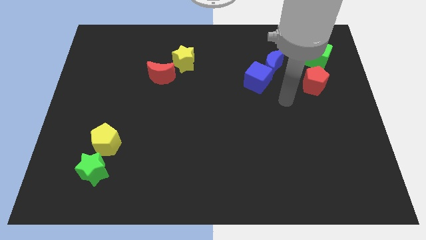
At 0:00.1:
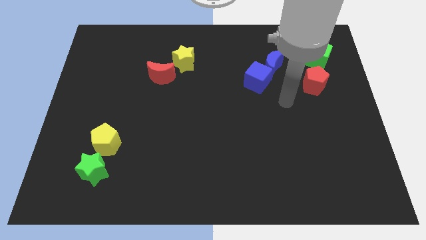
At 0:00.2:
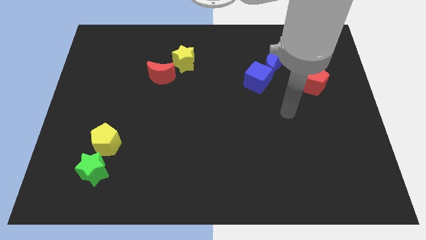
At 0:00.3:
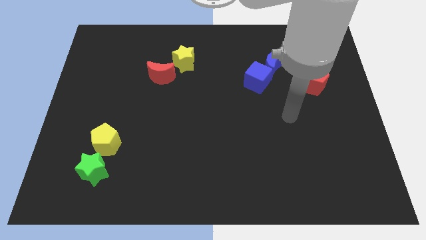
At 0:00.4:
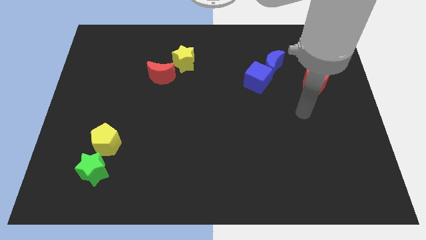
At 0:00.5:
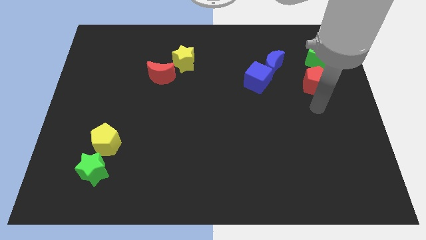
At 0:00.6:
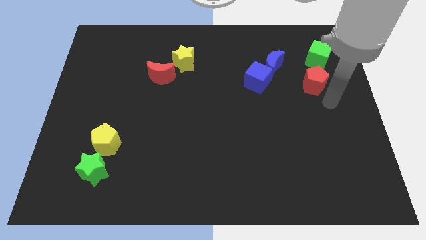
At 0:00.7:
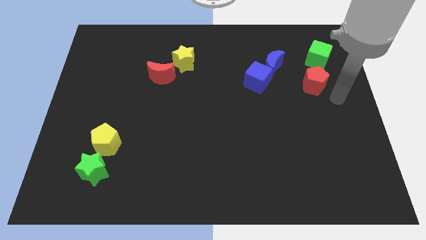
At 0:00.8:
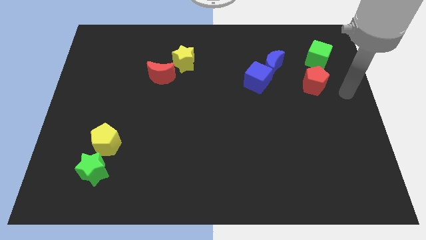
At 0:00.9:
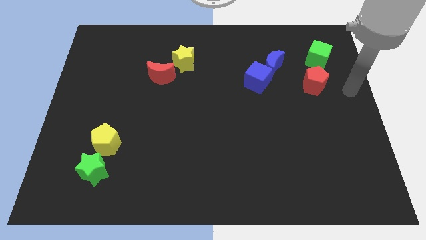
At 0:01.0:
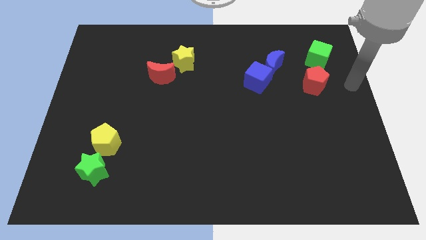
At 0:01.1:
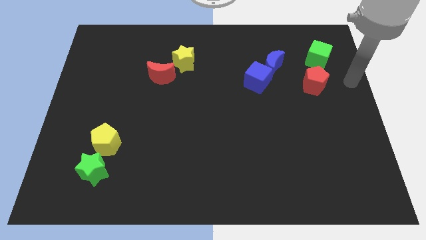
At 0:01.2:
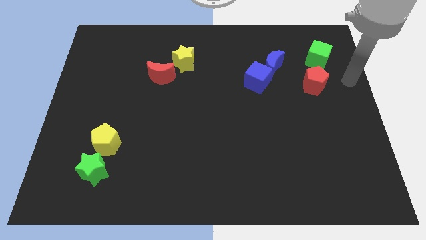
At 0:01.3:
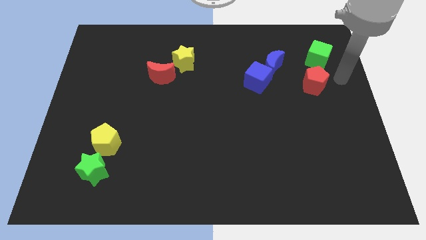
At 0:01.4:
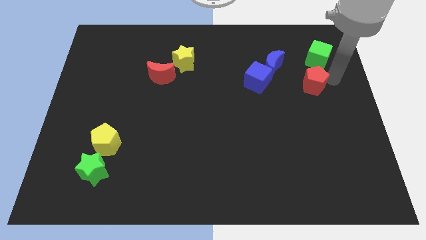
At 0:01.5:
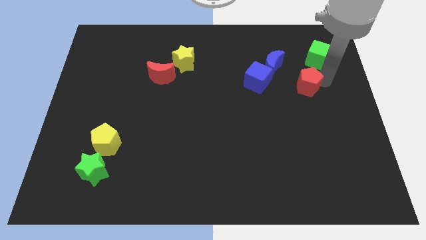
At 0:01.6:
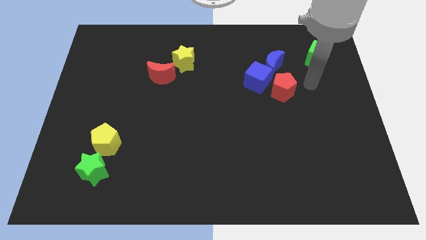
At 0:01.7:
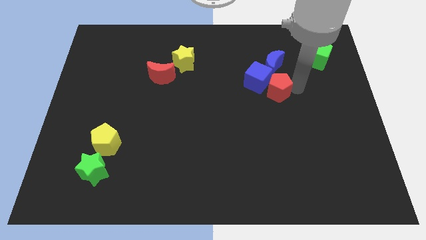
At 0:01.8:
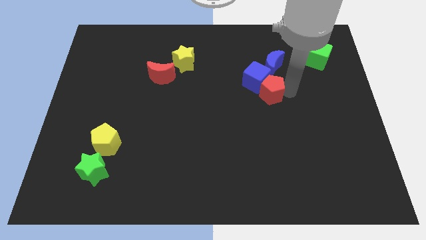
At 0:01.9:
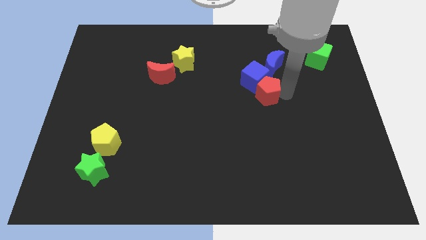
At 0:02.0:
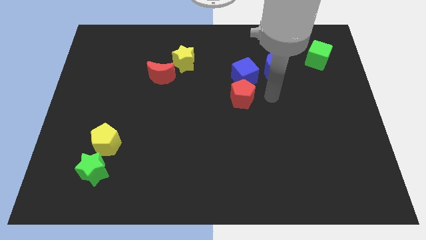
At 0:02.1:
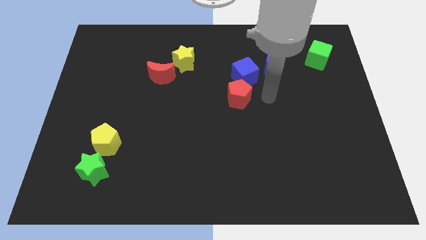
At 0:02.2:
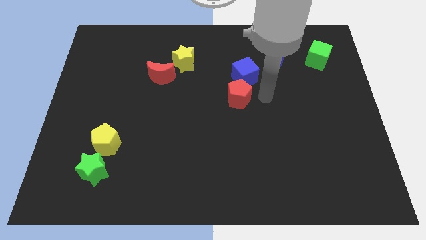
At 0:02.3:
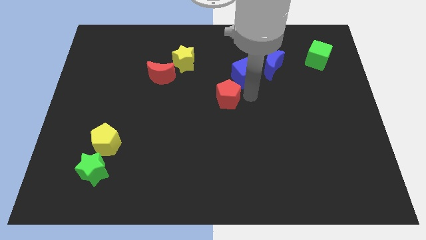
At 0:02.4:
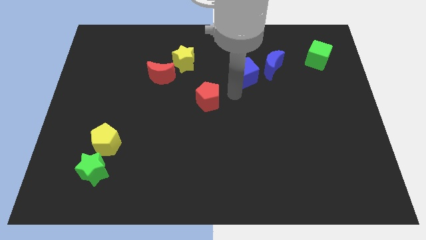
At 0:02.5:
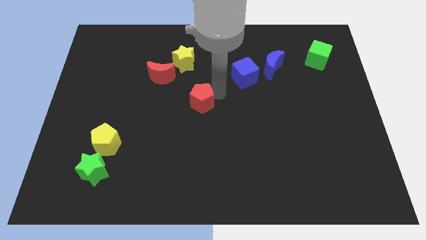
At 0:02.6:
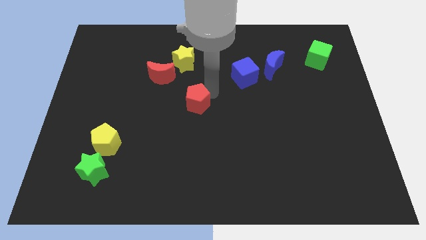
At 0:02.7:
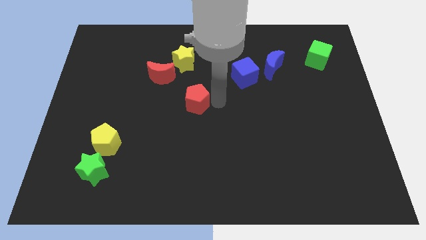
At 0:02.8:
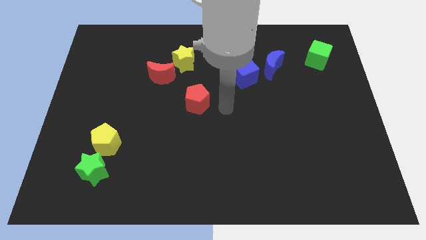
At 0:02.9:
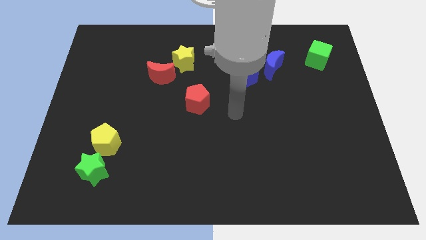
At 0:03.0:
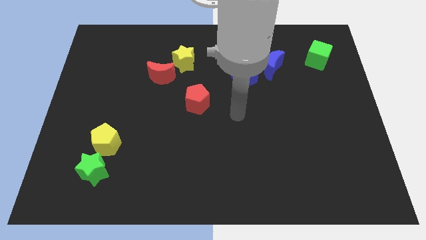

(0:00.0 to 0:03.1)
push the red pentagon to the center of the board

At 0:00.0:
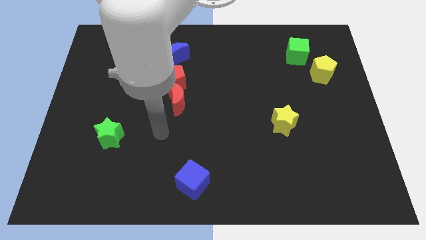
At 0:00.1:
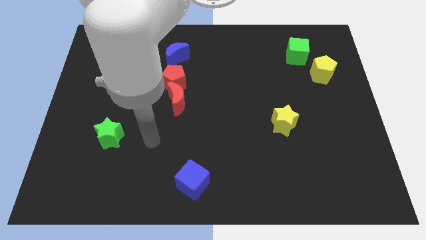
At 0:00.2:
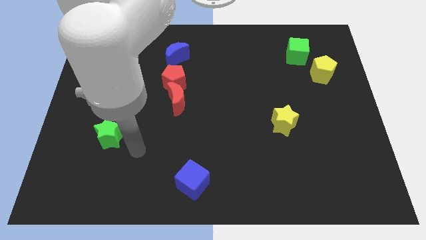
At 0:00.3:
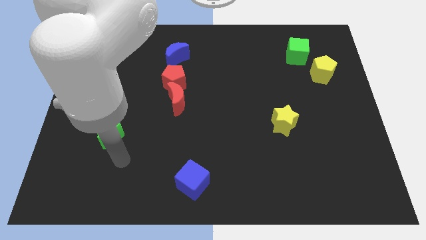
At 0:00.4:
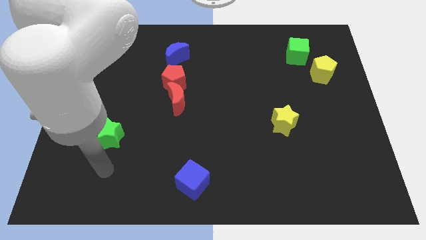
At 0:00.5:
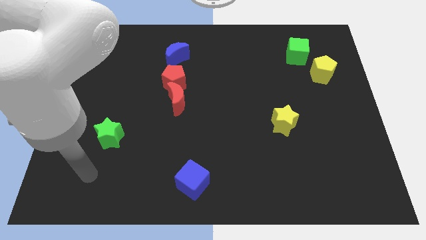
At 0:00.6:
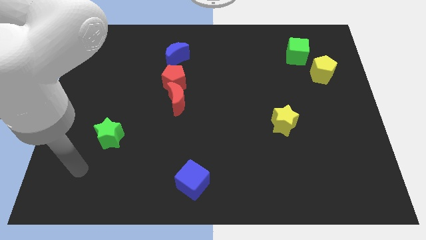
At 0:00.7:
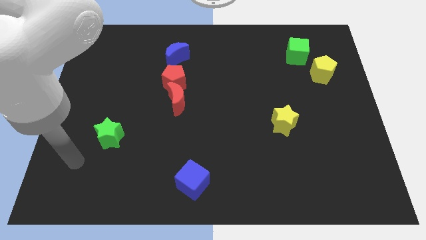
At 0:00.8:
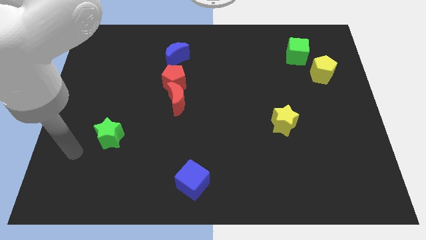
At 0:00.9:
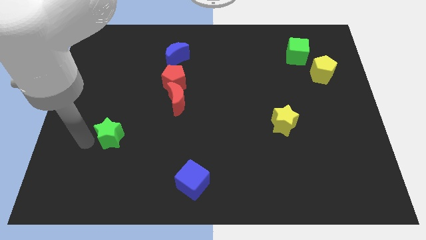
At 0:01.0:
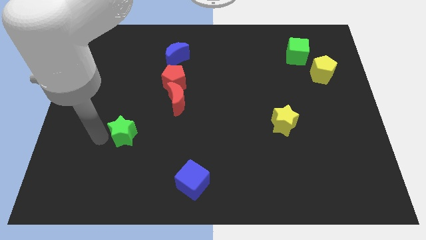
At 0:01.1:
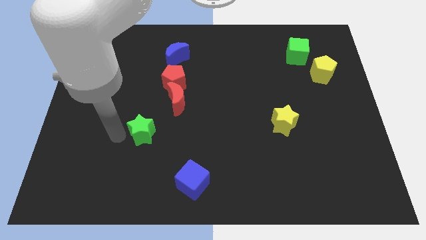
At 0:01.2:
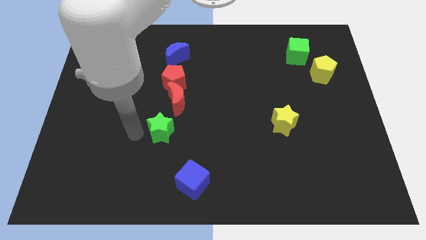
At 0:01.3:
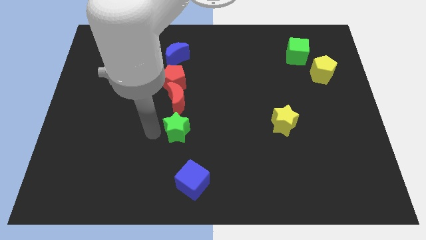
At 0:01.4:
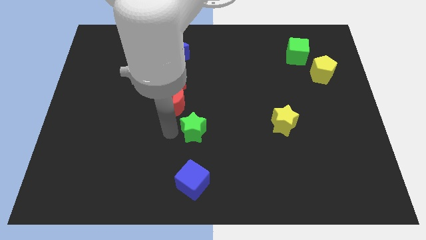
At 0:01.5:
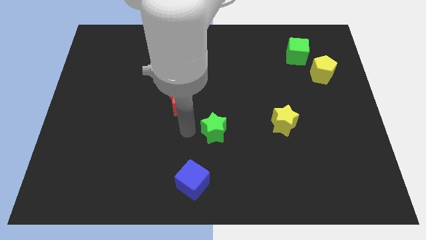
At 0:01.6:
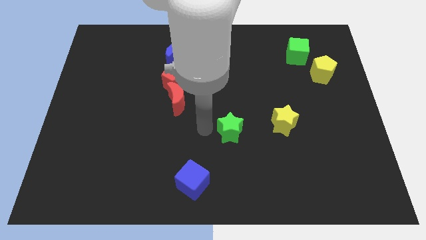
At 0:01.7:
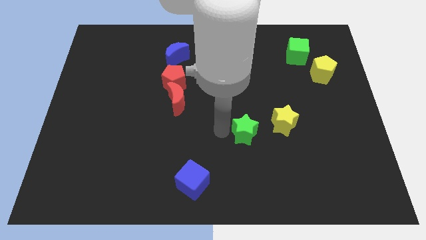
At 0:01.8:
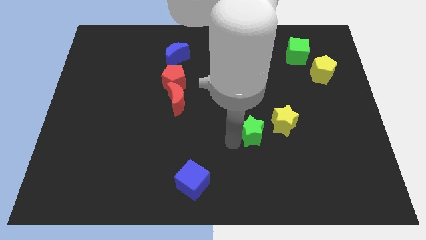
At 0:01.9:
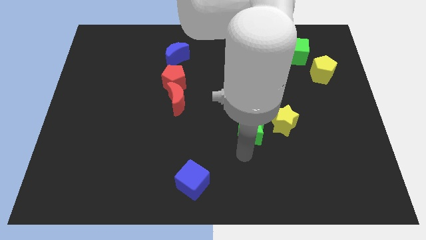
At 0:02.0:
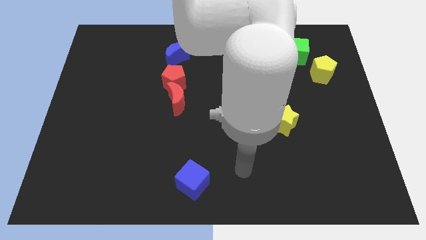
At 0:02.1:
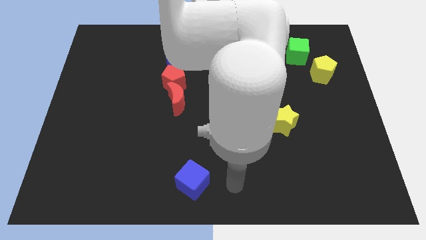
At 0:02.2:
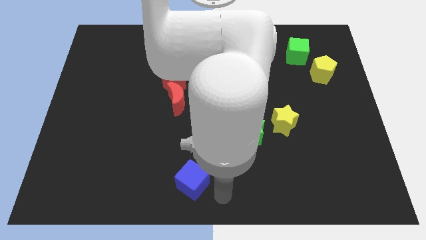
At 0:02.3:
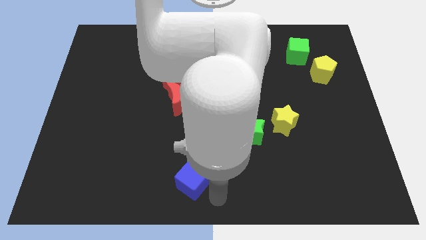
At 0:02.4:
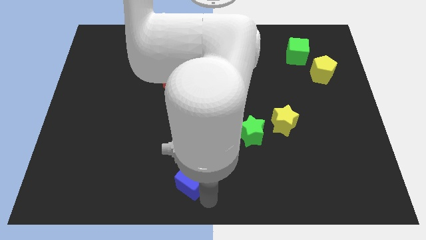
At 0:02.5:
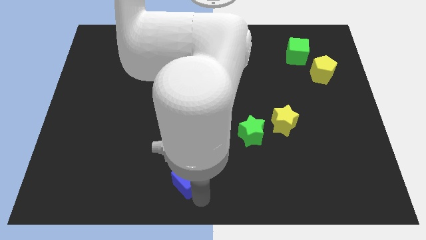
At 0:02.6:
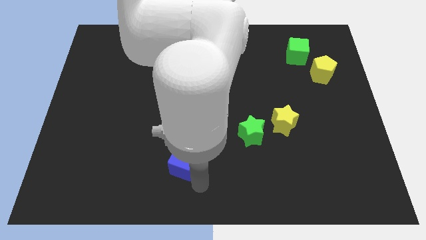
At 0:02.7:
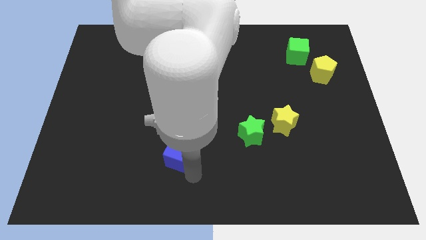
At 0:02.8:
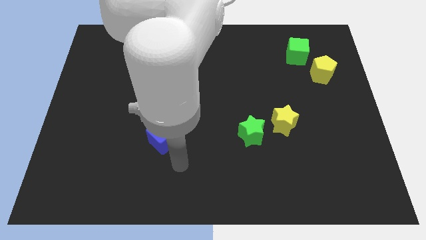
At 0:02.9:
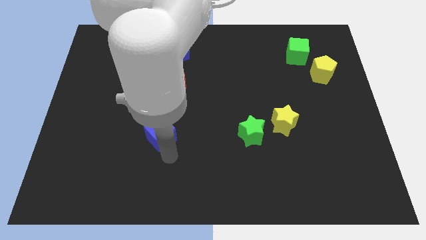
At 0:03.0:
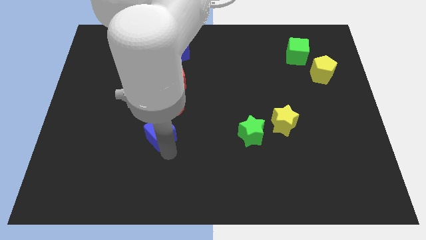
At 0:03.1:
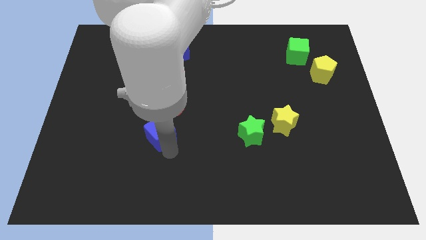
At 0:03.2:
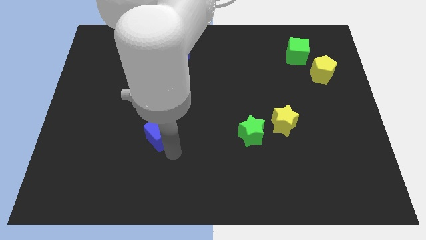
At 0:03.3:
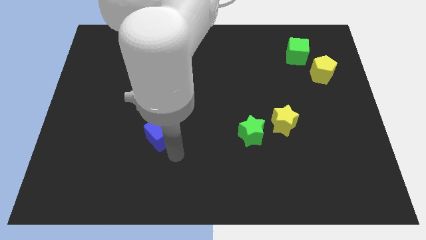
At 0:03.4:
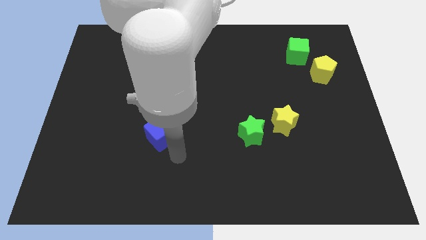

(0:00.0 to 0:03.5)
place the green star and the blue cube in a horizontal line

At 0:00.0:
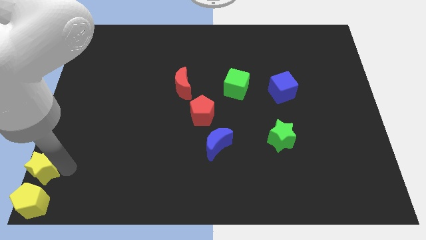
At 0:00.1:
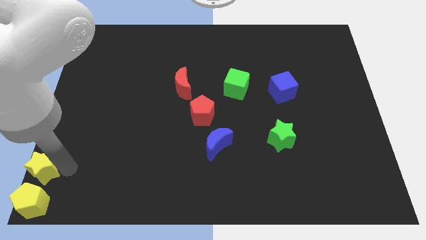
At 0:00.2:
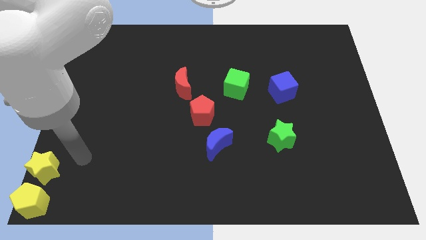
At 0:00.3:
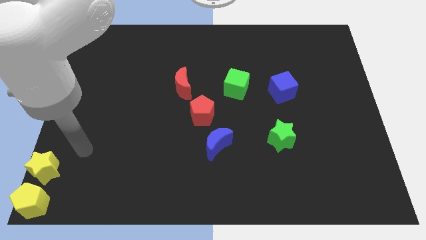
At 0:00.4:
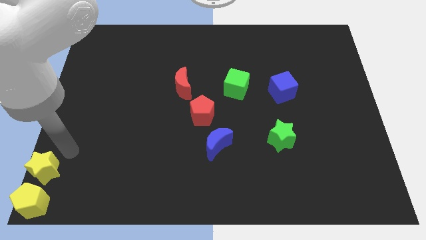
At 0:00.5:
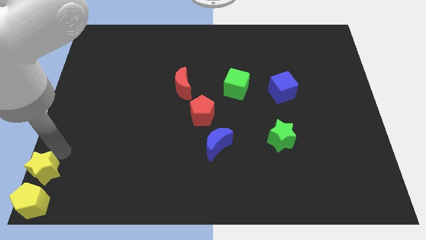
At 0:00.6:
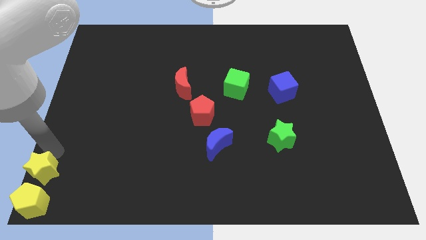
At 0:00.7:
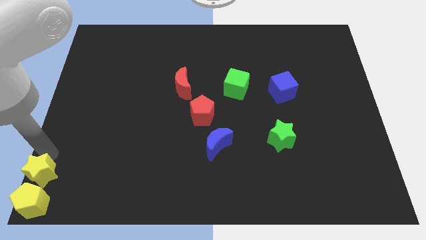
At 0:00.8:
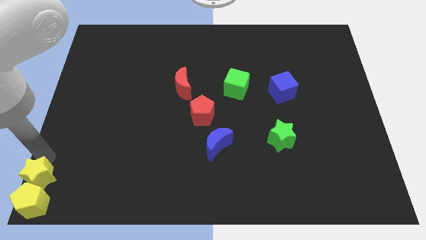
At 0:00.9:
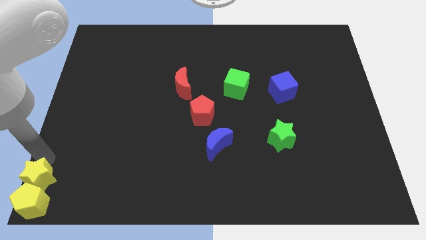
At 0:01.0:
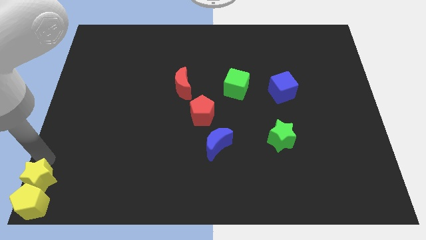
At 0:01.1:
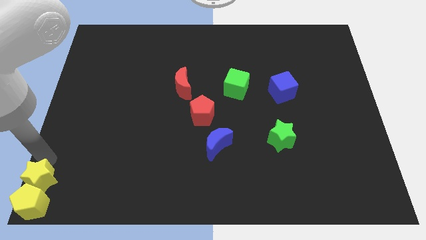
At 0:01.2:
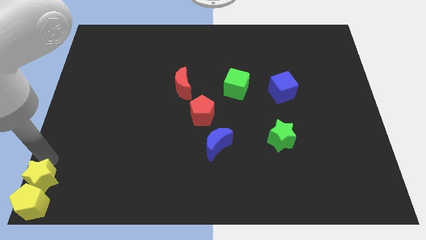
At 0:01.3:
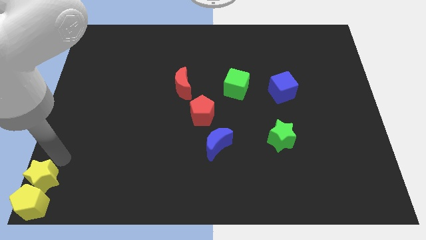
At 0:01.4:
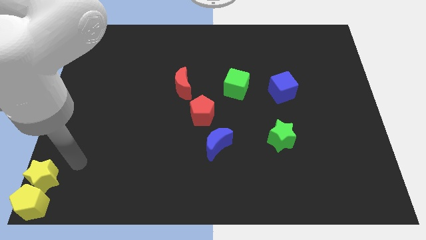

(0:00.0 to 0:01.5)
push the yellow star into the yellow pentagon

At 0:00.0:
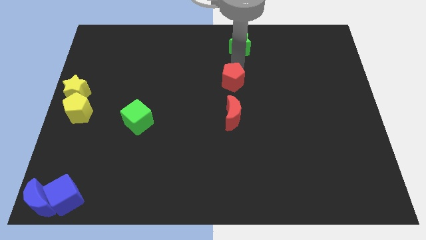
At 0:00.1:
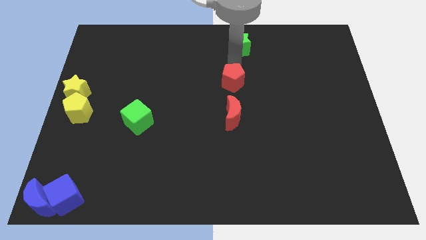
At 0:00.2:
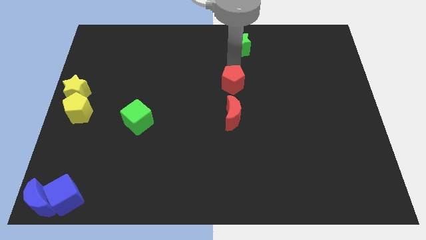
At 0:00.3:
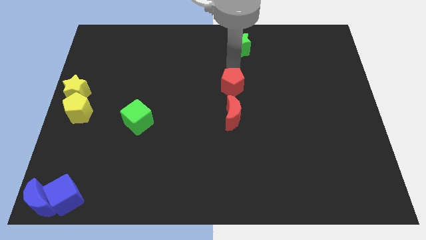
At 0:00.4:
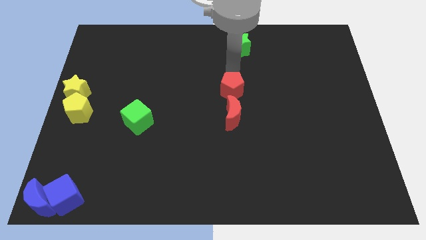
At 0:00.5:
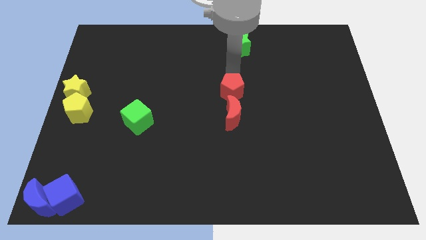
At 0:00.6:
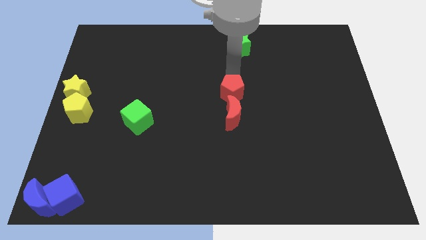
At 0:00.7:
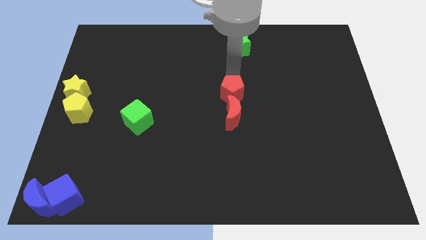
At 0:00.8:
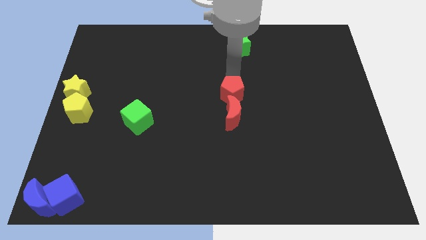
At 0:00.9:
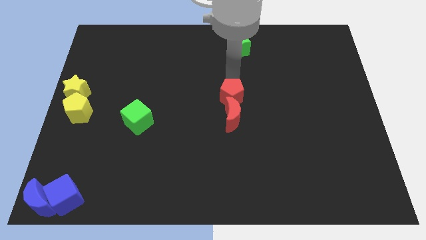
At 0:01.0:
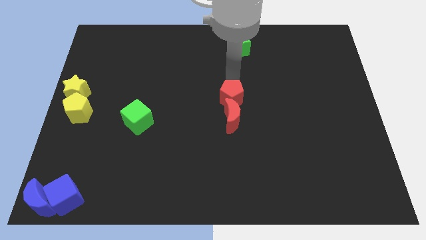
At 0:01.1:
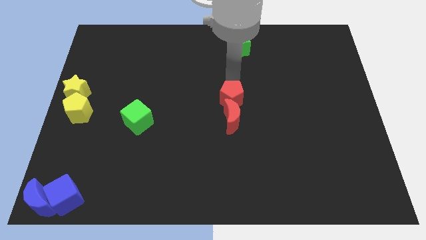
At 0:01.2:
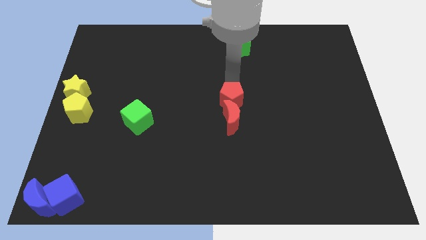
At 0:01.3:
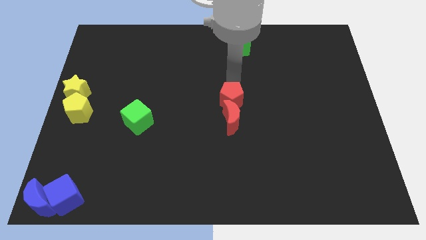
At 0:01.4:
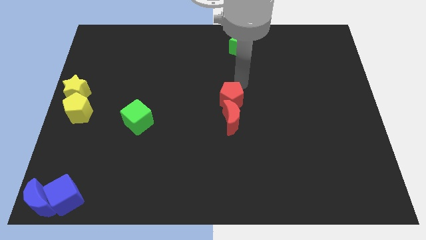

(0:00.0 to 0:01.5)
move the red pentagon into the red crescent
